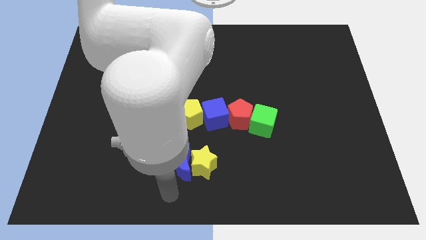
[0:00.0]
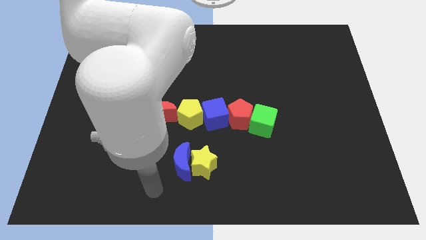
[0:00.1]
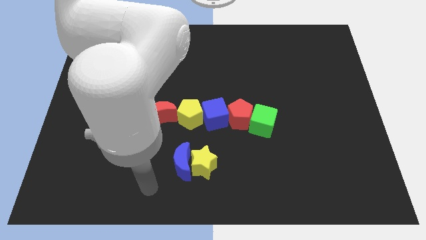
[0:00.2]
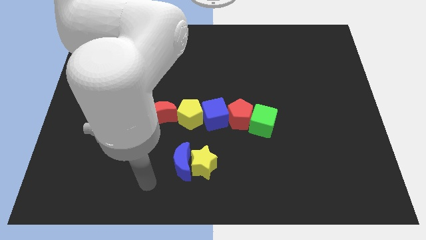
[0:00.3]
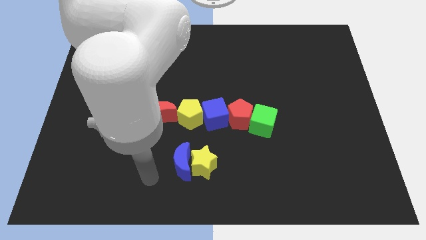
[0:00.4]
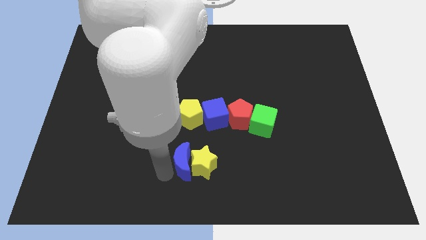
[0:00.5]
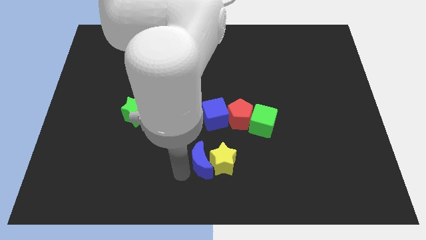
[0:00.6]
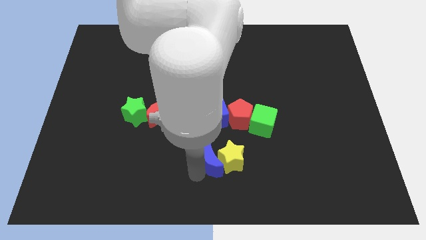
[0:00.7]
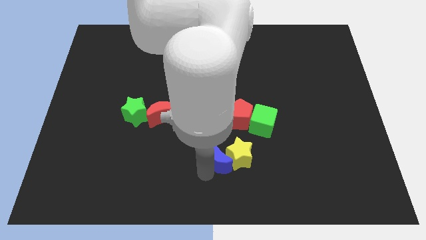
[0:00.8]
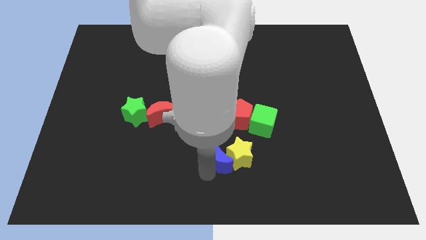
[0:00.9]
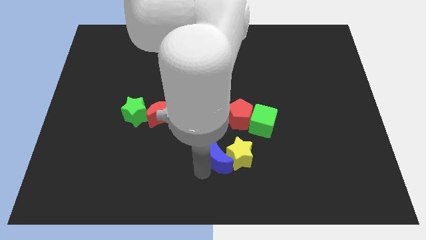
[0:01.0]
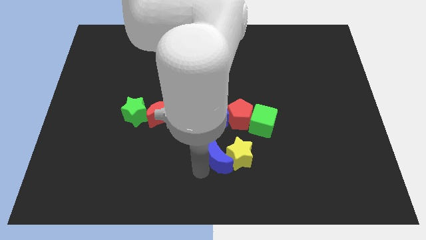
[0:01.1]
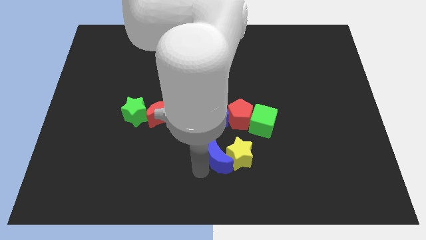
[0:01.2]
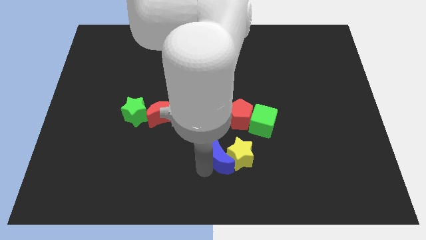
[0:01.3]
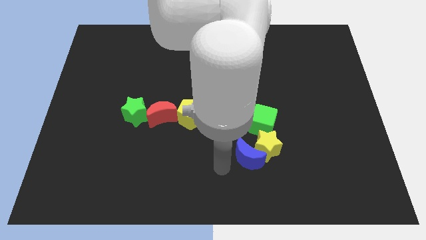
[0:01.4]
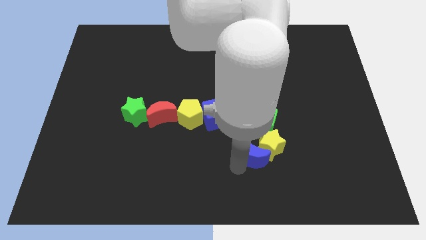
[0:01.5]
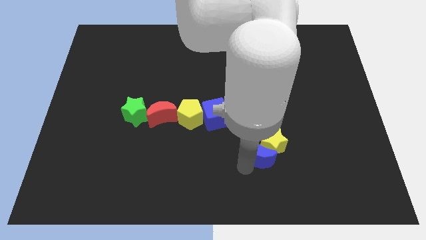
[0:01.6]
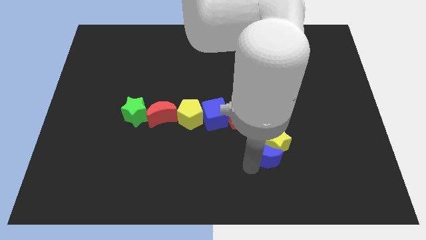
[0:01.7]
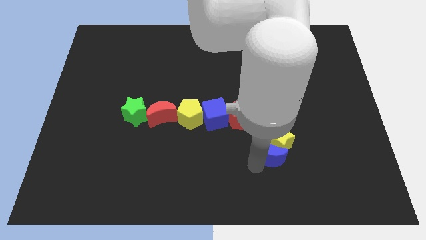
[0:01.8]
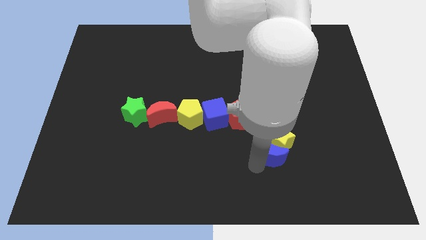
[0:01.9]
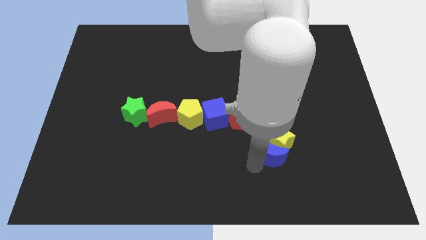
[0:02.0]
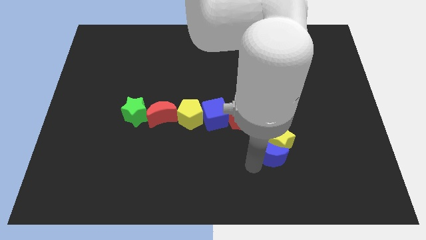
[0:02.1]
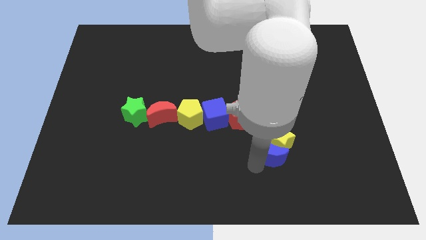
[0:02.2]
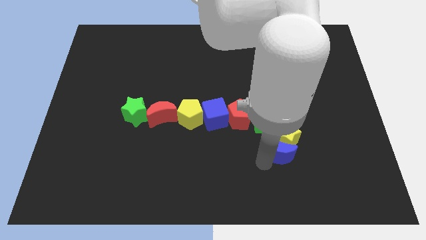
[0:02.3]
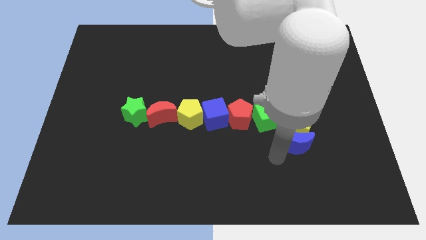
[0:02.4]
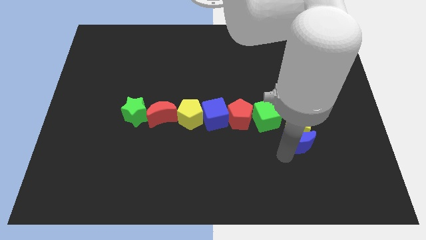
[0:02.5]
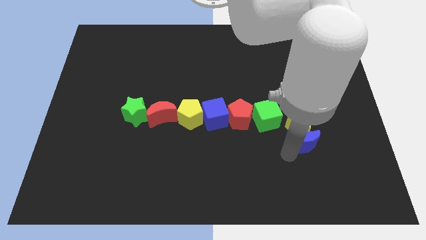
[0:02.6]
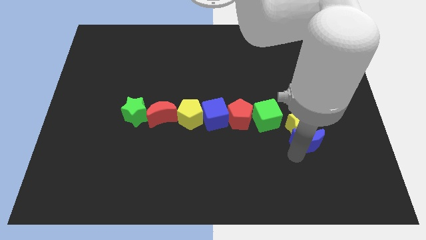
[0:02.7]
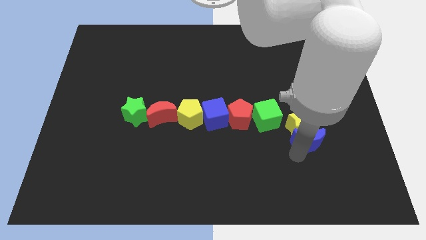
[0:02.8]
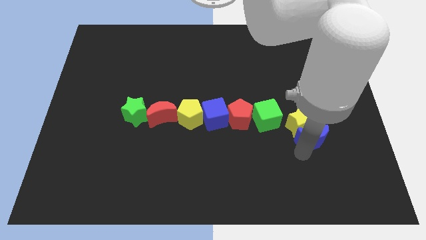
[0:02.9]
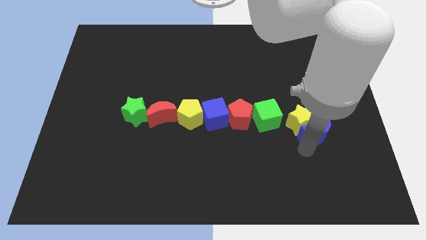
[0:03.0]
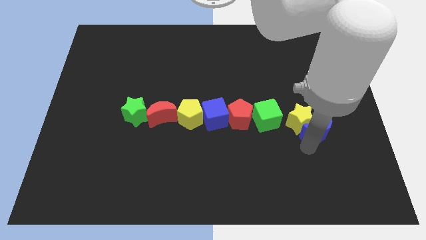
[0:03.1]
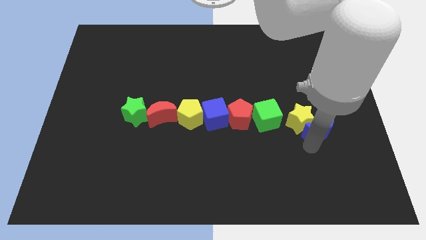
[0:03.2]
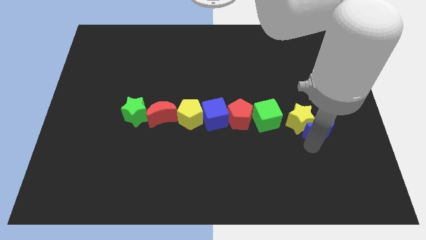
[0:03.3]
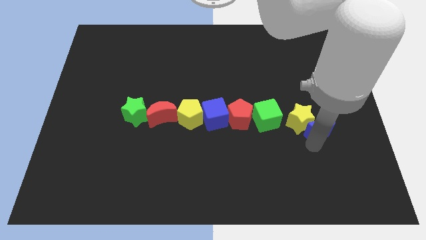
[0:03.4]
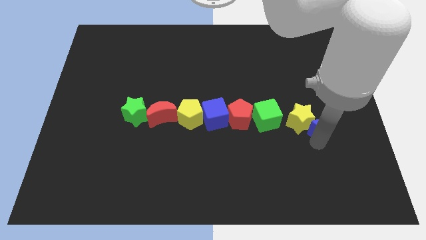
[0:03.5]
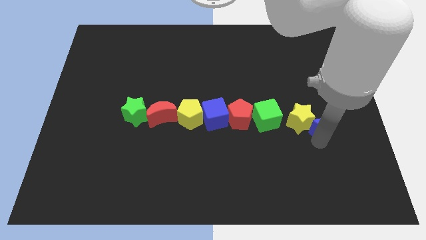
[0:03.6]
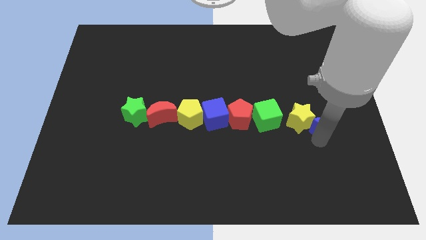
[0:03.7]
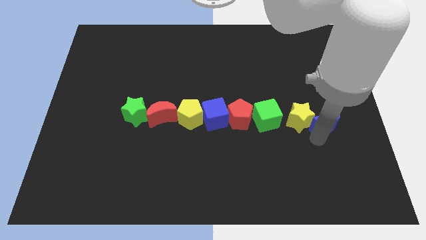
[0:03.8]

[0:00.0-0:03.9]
place yellow star beside green cube

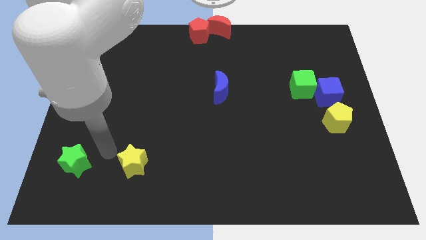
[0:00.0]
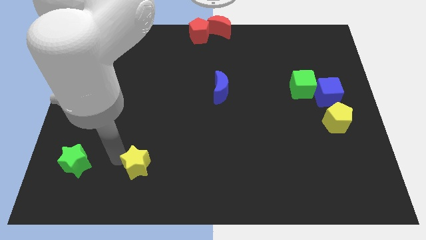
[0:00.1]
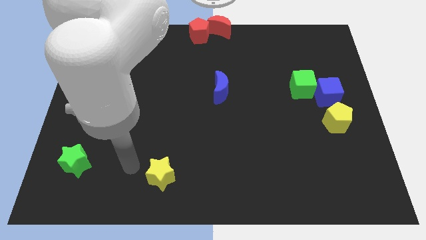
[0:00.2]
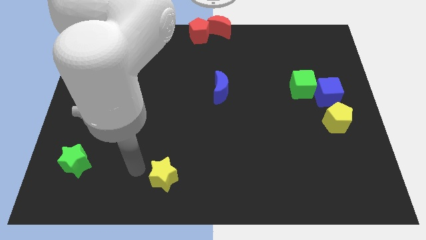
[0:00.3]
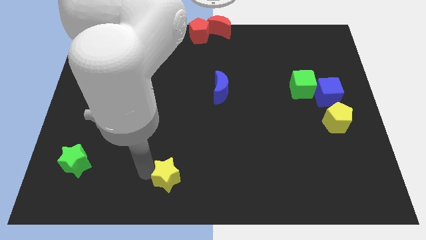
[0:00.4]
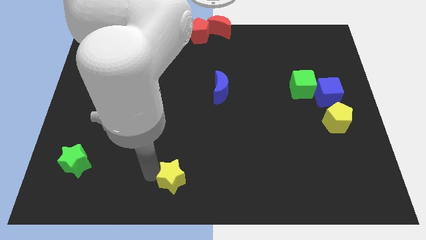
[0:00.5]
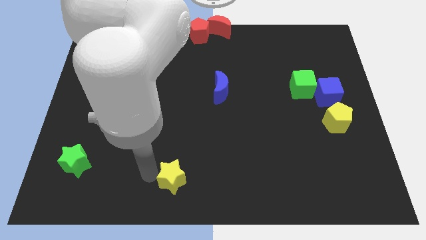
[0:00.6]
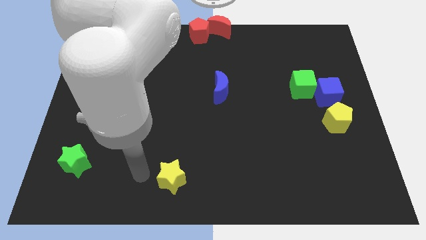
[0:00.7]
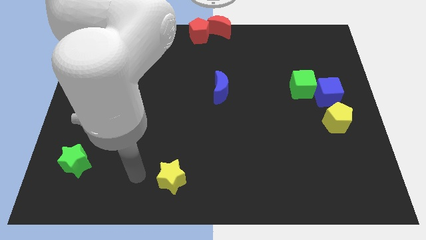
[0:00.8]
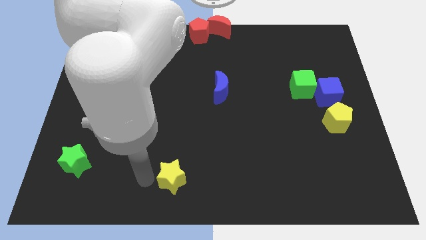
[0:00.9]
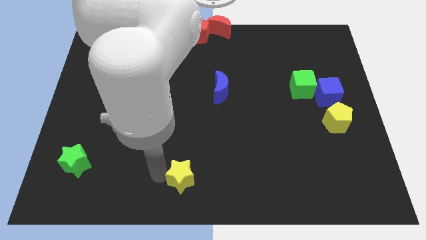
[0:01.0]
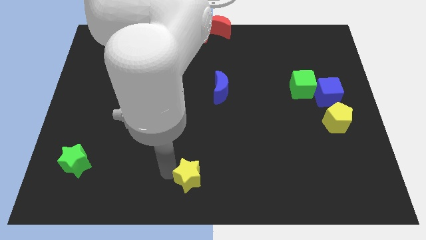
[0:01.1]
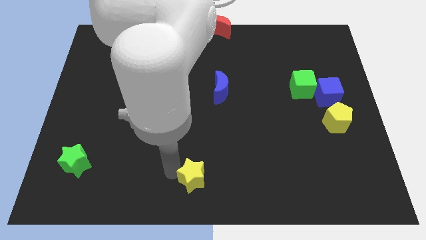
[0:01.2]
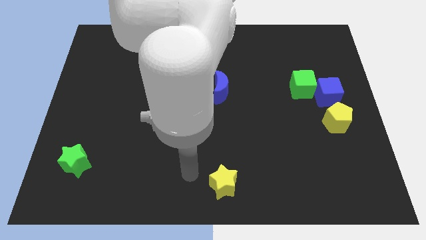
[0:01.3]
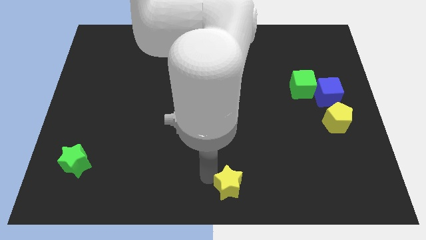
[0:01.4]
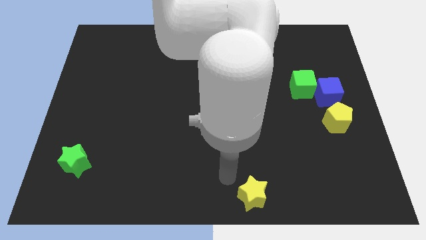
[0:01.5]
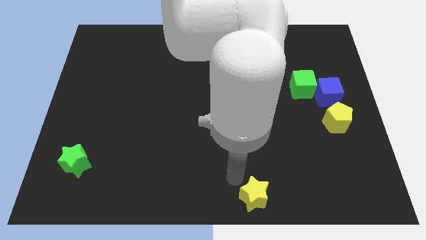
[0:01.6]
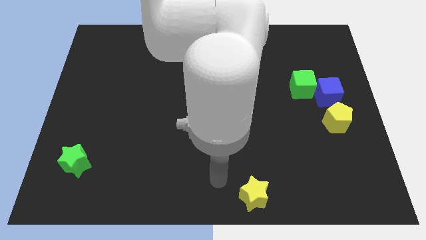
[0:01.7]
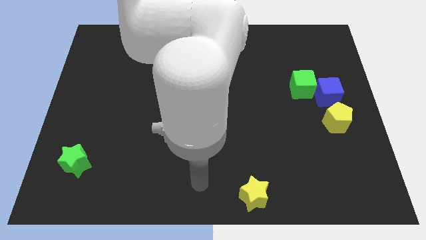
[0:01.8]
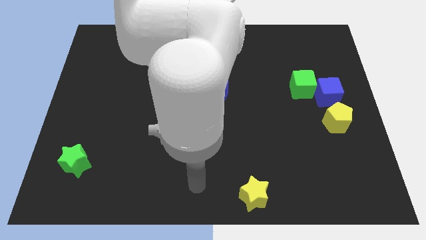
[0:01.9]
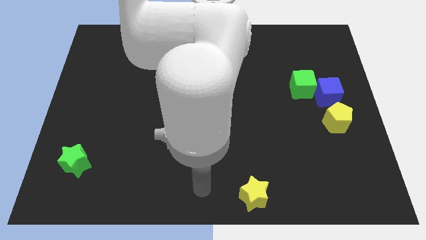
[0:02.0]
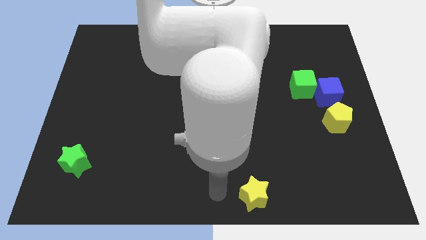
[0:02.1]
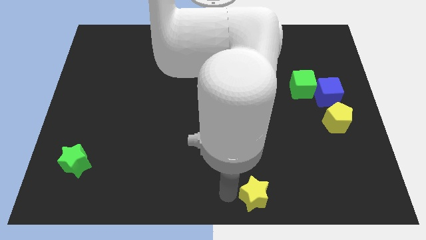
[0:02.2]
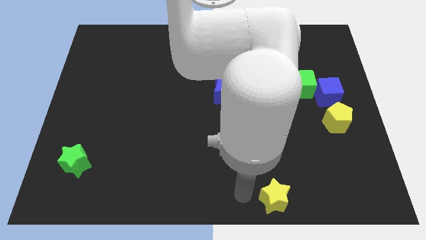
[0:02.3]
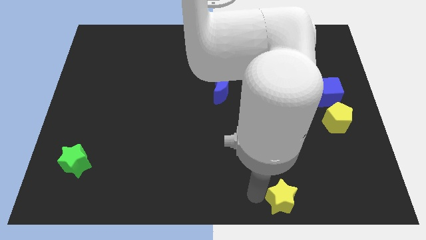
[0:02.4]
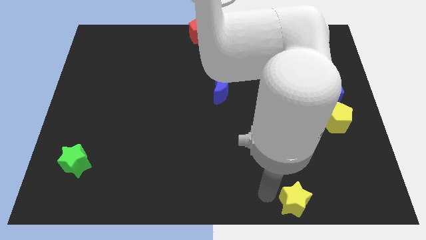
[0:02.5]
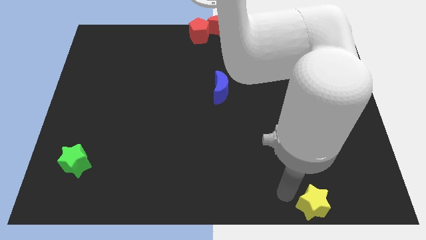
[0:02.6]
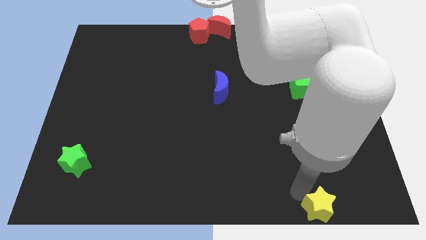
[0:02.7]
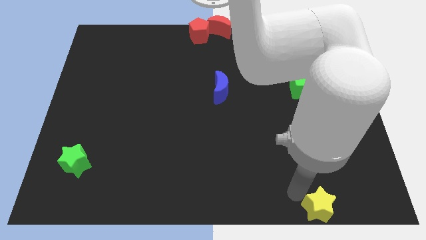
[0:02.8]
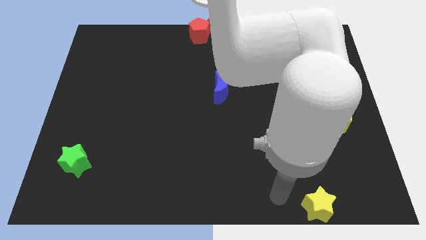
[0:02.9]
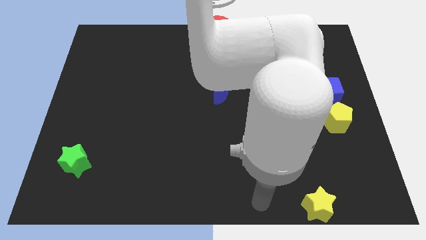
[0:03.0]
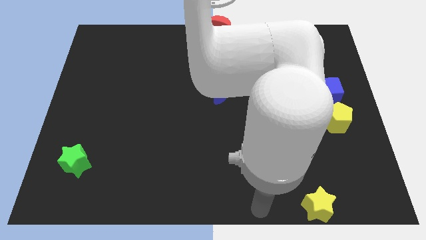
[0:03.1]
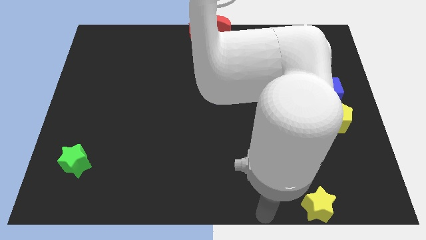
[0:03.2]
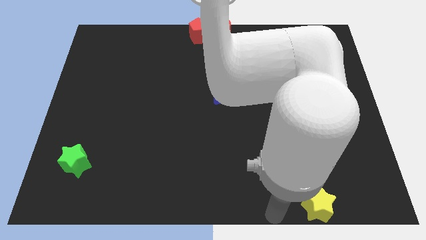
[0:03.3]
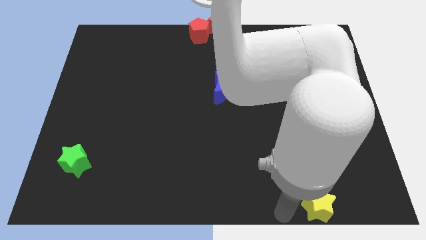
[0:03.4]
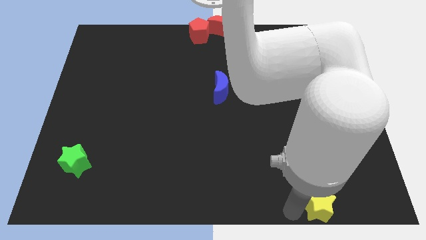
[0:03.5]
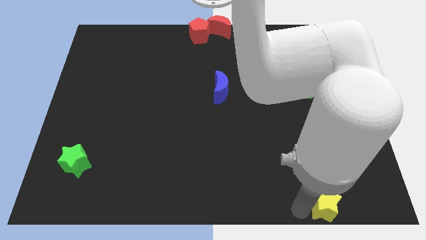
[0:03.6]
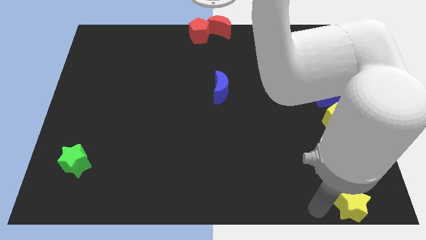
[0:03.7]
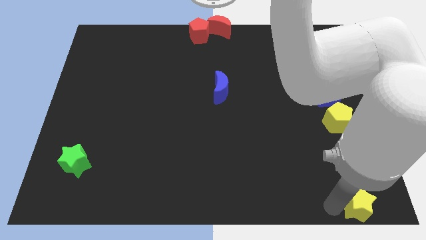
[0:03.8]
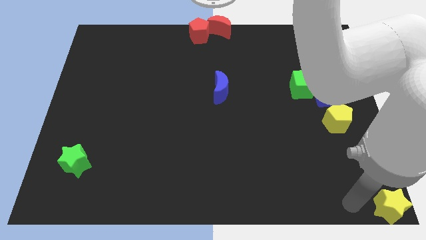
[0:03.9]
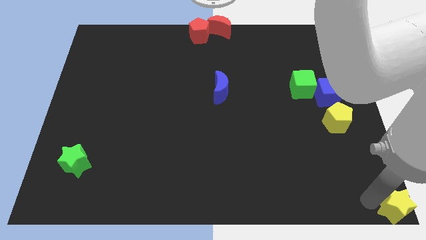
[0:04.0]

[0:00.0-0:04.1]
push yellow star to the bottom right corner

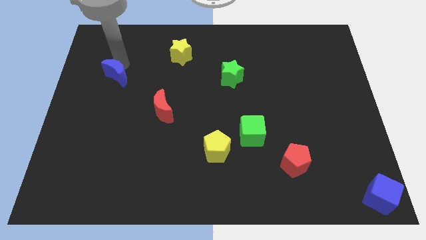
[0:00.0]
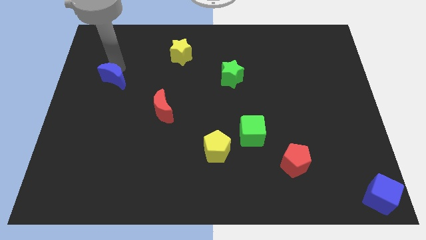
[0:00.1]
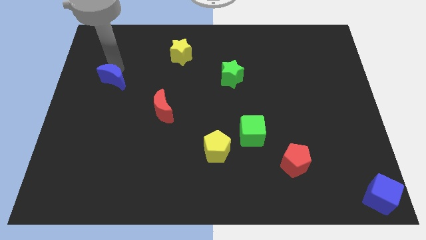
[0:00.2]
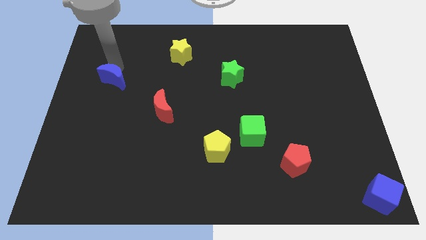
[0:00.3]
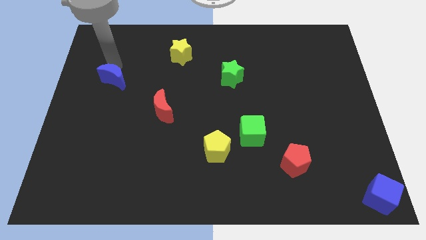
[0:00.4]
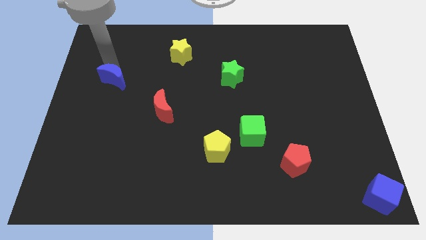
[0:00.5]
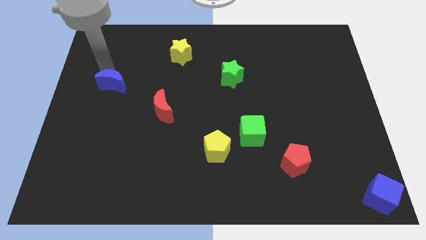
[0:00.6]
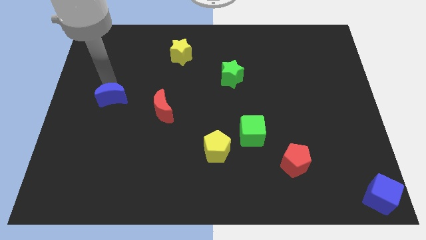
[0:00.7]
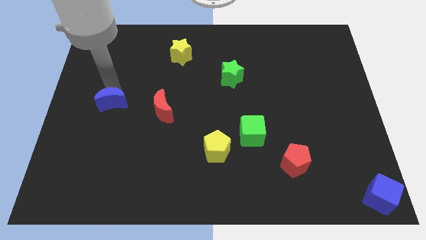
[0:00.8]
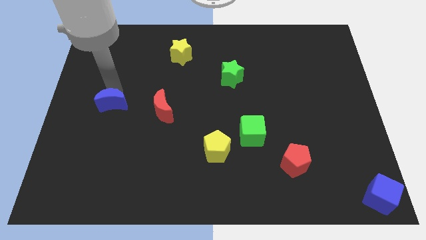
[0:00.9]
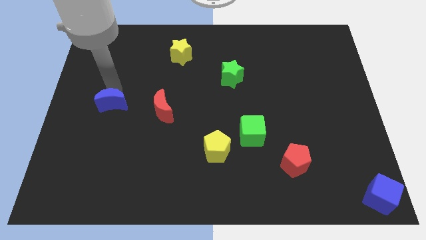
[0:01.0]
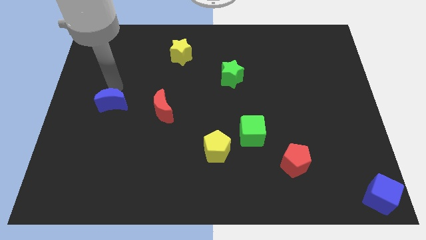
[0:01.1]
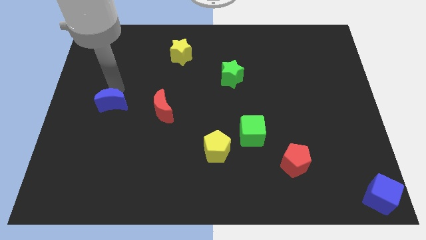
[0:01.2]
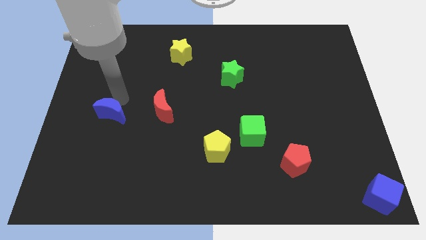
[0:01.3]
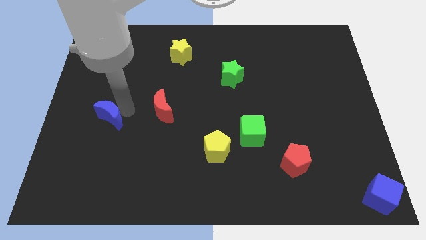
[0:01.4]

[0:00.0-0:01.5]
place the blue crescent horizontally to the left side of the red crescent
